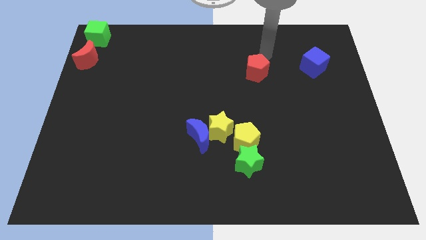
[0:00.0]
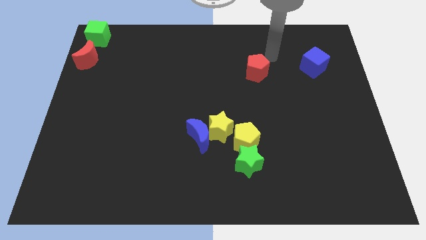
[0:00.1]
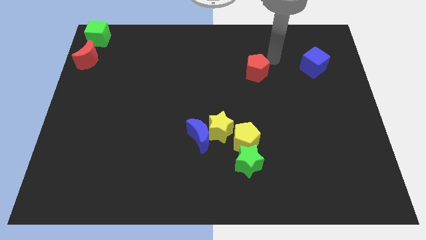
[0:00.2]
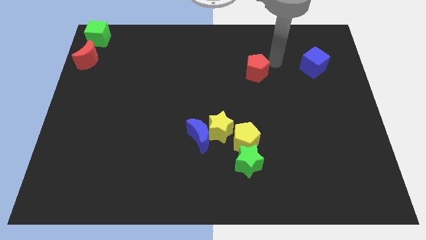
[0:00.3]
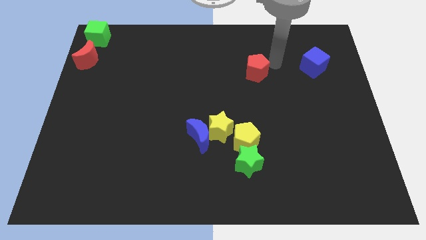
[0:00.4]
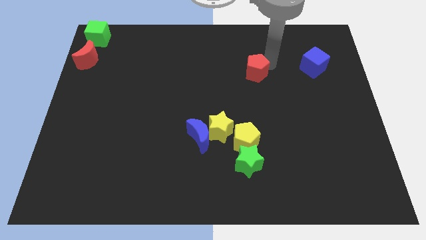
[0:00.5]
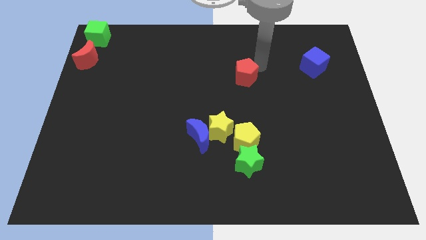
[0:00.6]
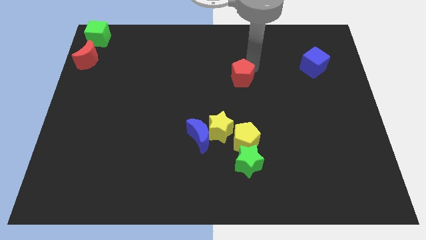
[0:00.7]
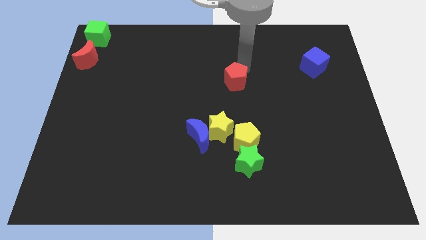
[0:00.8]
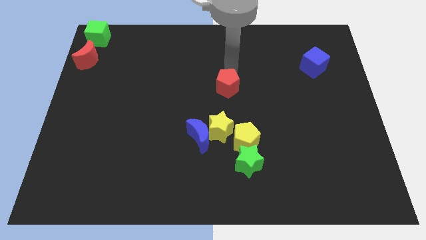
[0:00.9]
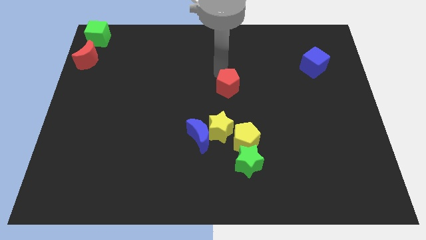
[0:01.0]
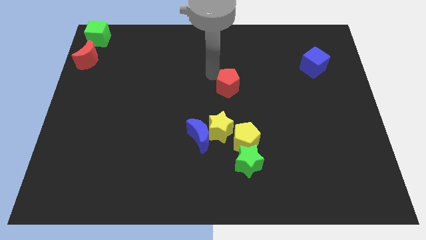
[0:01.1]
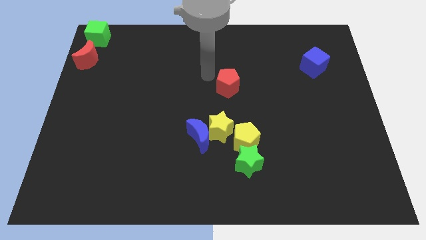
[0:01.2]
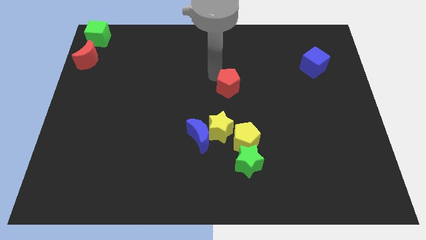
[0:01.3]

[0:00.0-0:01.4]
push the red pentagon to the bottom of the board

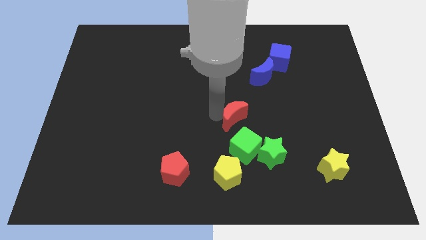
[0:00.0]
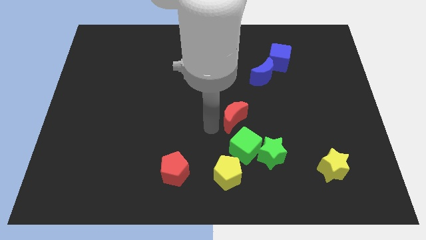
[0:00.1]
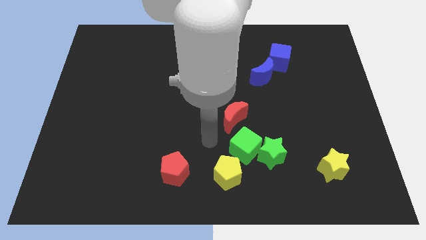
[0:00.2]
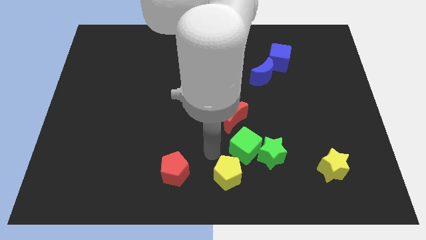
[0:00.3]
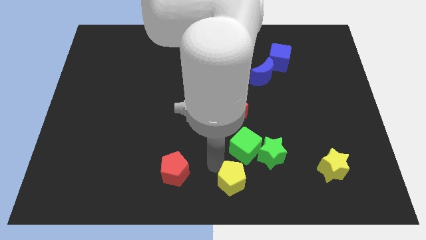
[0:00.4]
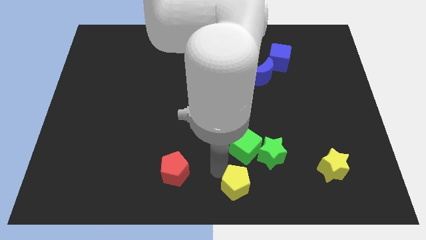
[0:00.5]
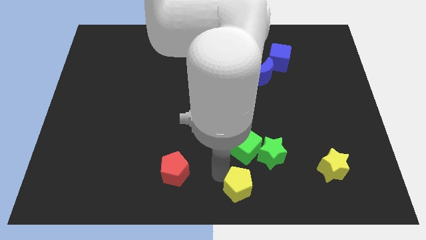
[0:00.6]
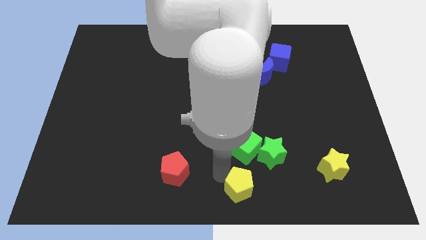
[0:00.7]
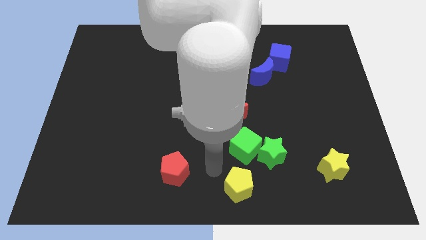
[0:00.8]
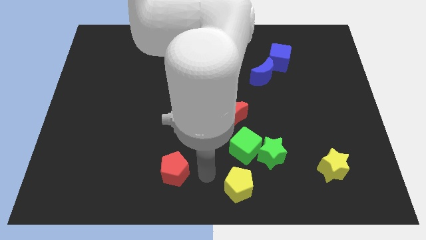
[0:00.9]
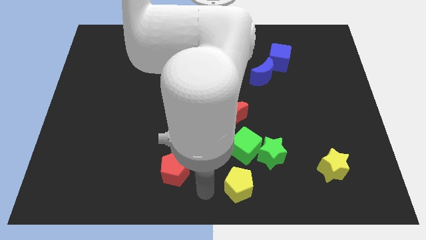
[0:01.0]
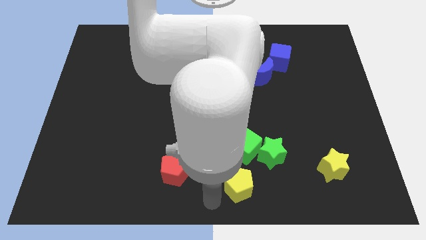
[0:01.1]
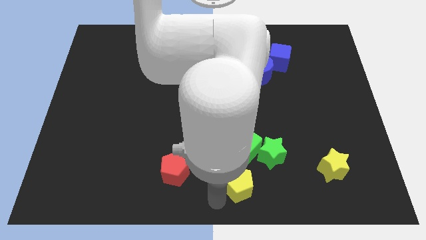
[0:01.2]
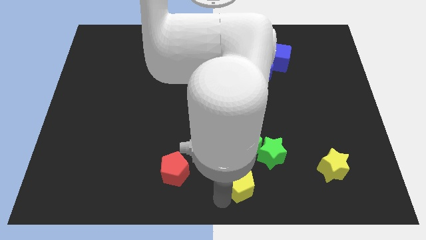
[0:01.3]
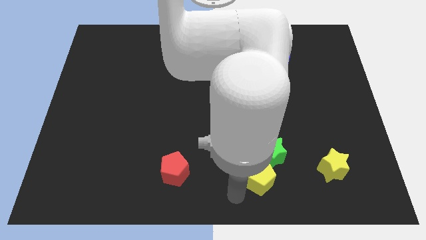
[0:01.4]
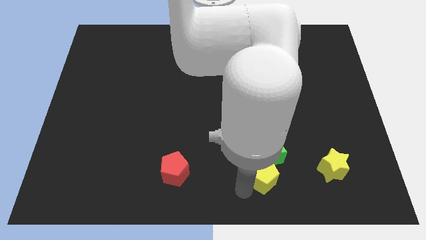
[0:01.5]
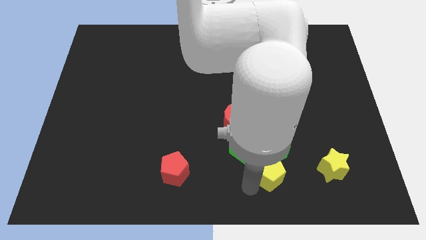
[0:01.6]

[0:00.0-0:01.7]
place the yellow pentagon under green star

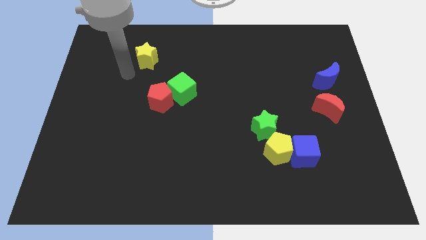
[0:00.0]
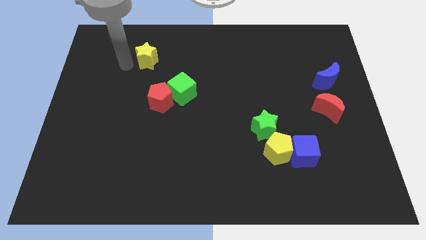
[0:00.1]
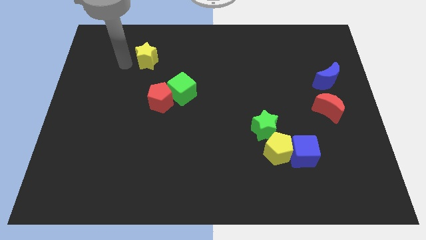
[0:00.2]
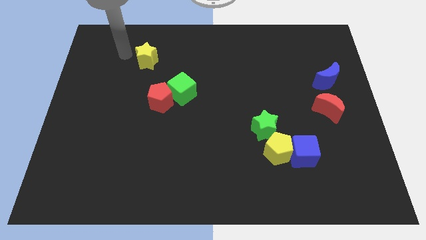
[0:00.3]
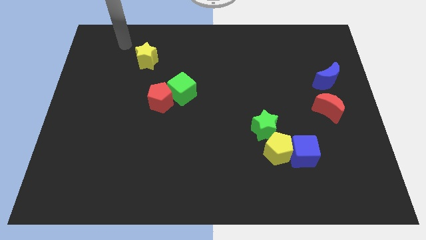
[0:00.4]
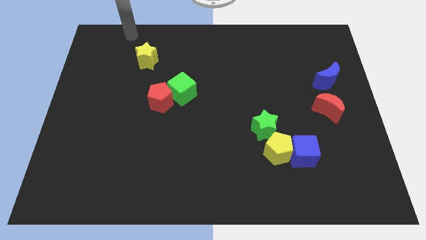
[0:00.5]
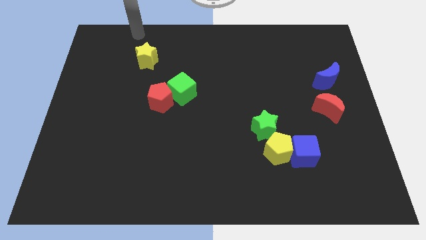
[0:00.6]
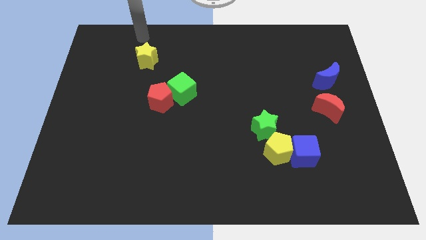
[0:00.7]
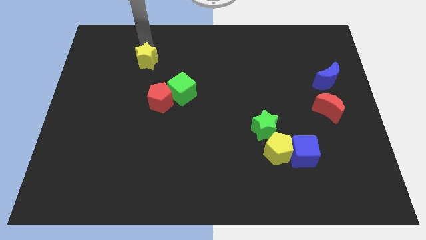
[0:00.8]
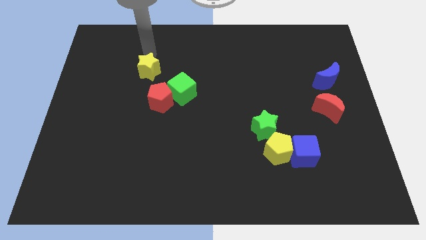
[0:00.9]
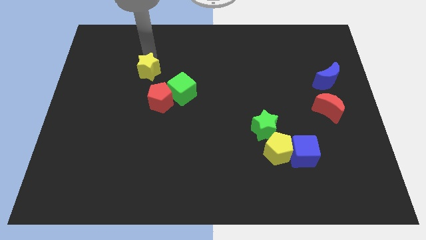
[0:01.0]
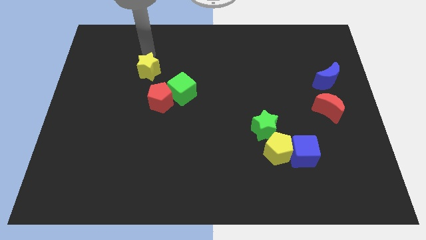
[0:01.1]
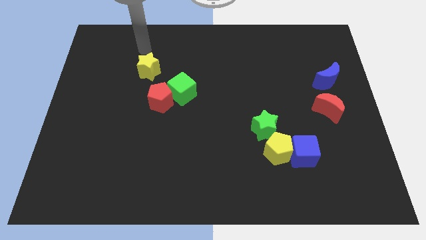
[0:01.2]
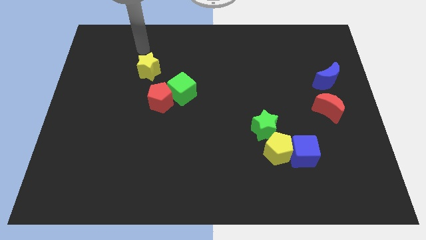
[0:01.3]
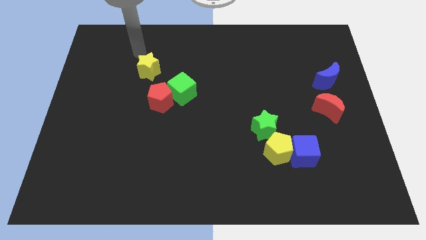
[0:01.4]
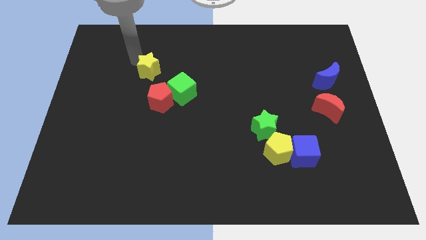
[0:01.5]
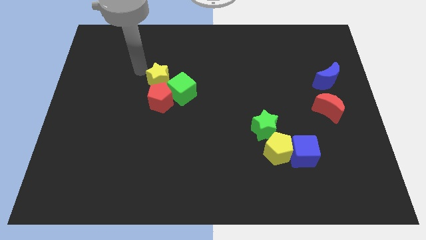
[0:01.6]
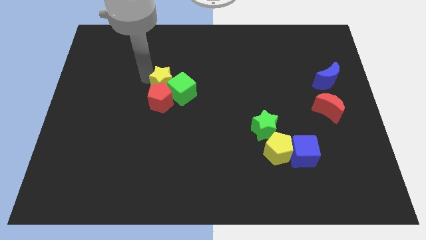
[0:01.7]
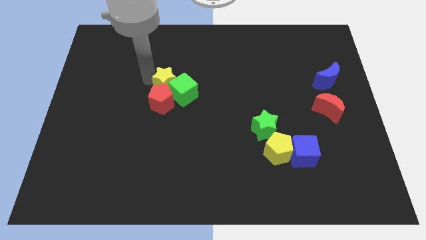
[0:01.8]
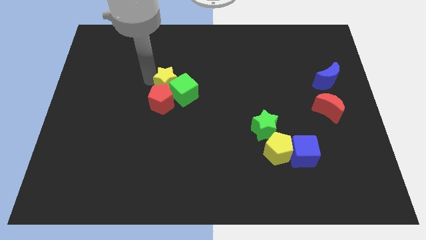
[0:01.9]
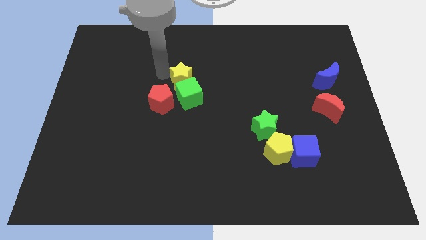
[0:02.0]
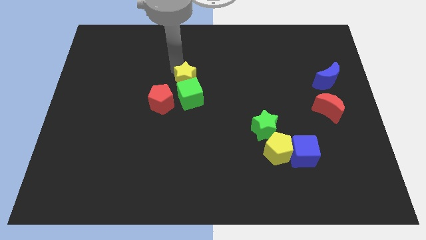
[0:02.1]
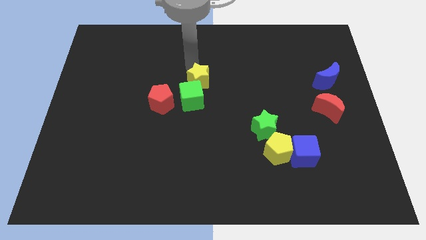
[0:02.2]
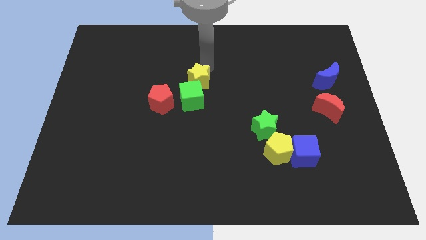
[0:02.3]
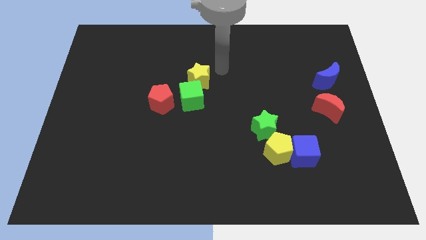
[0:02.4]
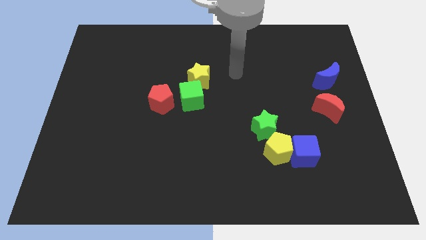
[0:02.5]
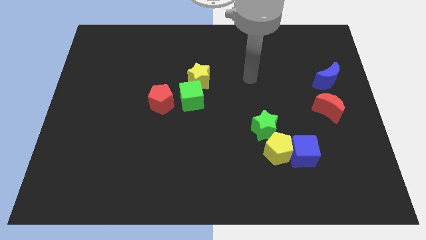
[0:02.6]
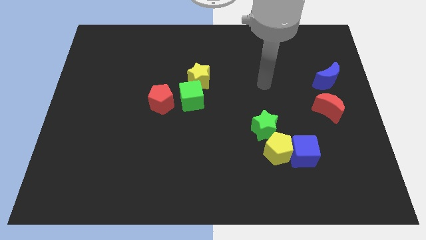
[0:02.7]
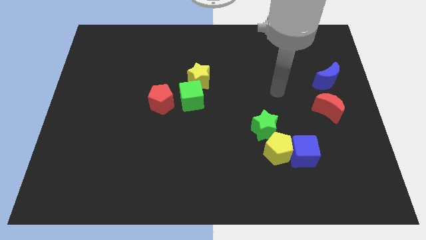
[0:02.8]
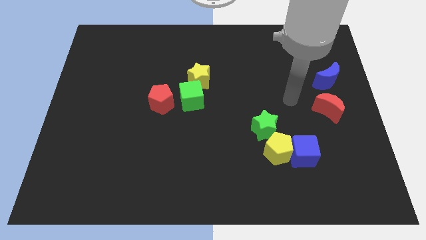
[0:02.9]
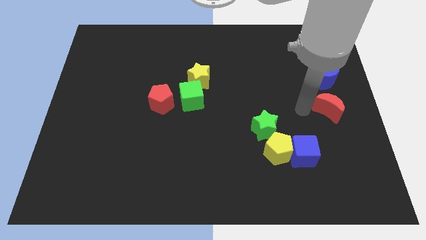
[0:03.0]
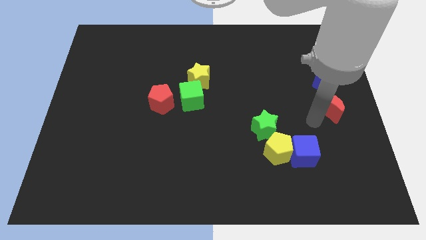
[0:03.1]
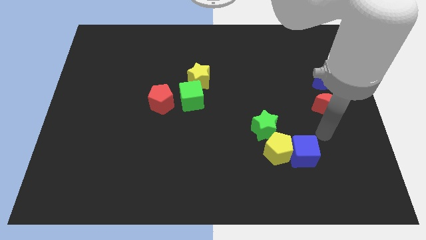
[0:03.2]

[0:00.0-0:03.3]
push the yellow star to the top of the green cube

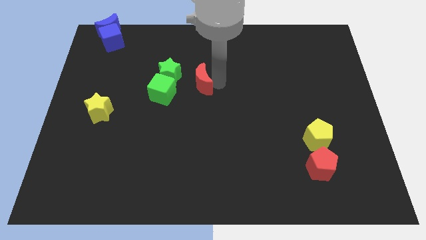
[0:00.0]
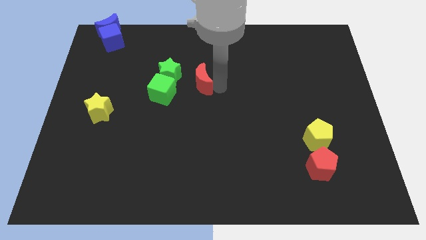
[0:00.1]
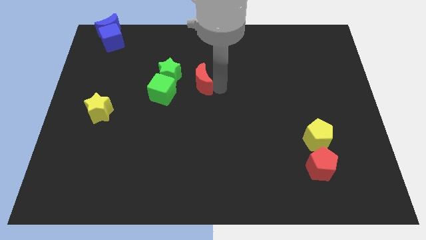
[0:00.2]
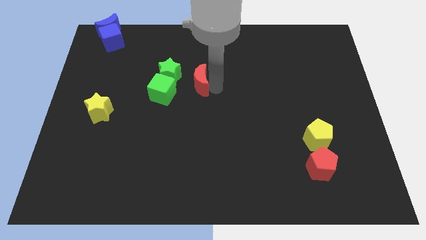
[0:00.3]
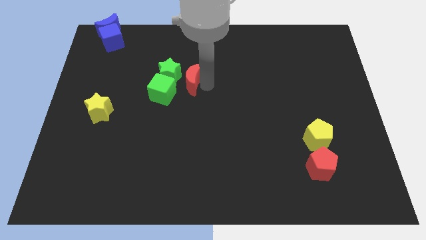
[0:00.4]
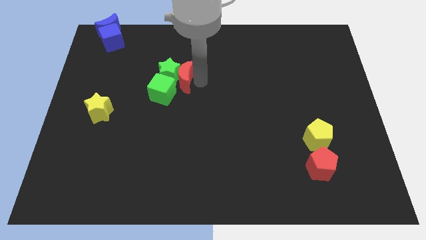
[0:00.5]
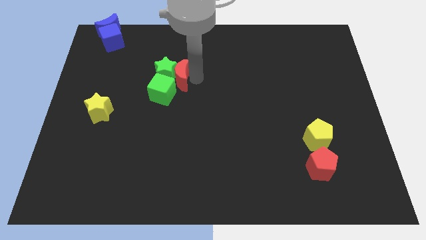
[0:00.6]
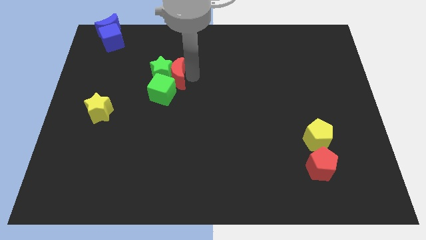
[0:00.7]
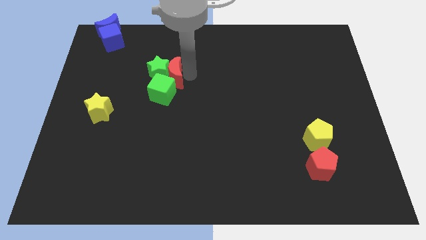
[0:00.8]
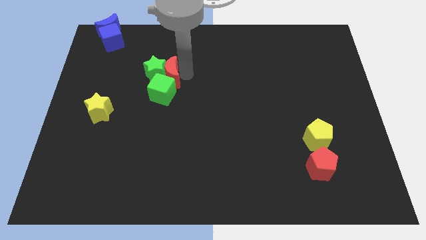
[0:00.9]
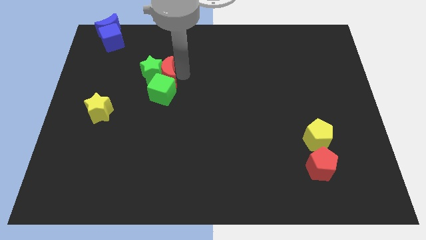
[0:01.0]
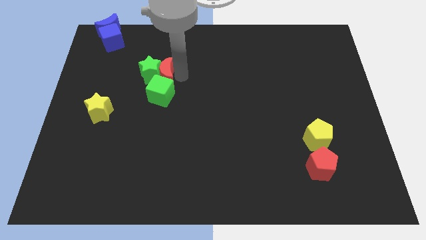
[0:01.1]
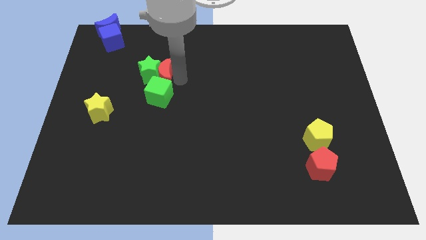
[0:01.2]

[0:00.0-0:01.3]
push the green star and red moon towards the left side of the board

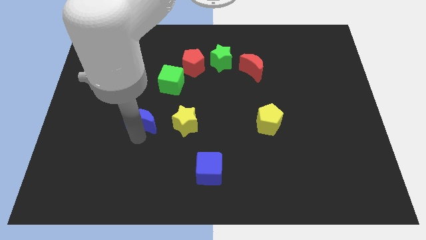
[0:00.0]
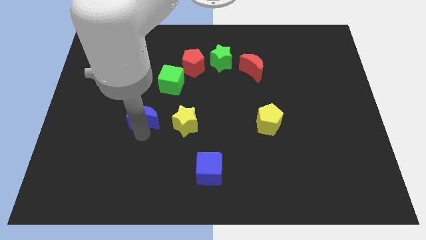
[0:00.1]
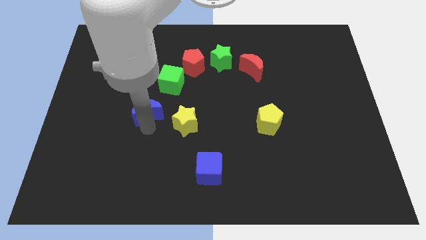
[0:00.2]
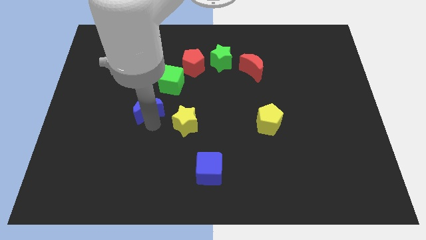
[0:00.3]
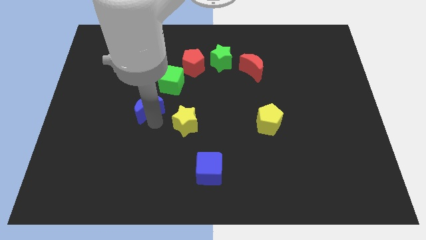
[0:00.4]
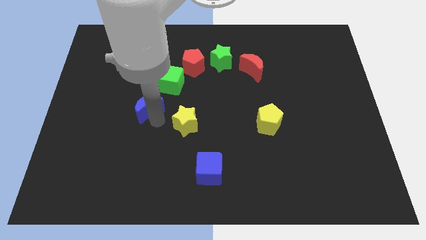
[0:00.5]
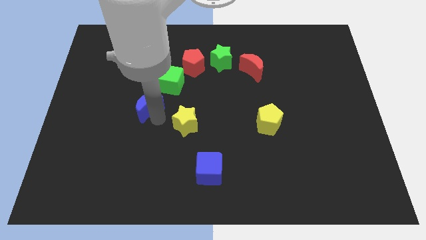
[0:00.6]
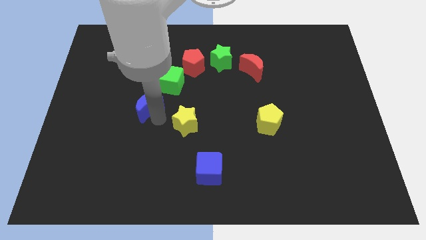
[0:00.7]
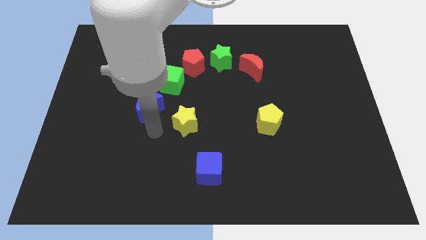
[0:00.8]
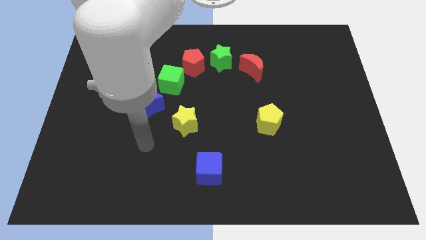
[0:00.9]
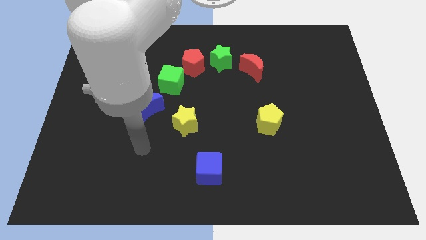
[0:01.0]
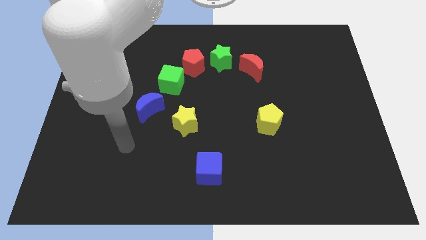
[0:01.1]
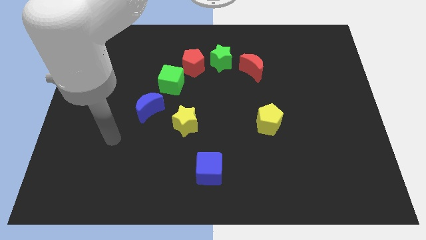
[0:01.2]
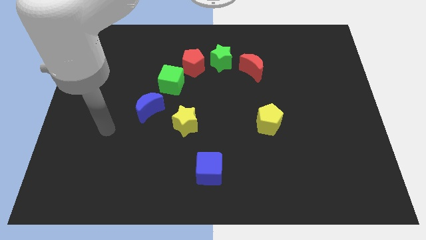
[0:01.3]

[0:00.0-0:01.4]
drag the blue moon slightly upwards
